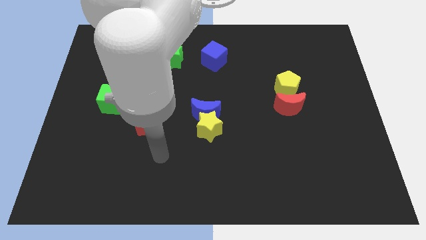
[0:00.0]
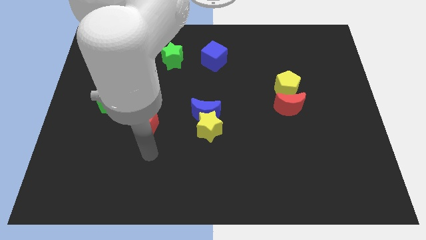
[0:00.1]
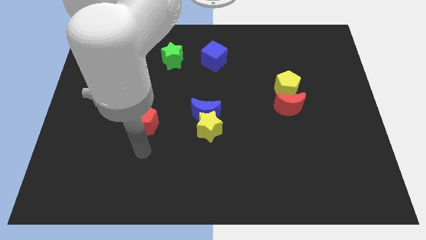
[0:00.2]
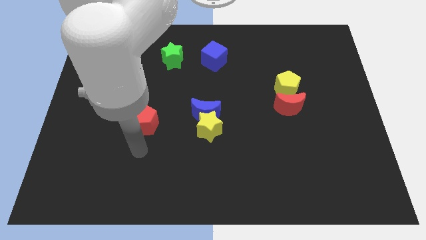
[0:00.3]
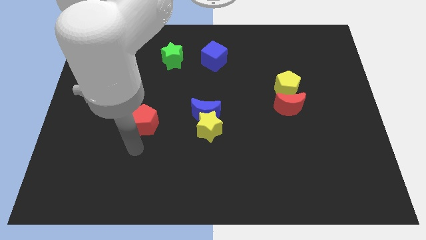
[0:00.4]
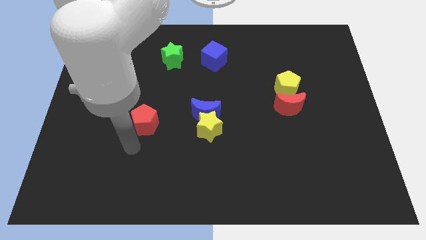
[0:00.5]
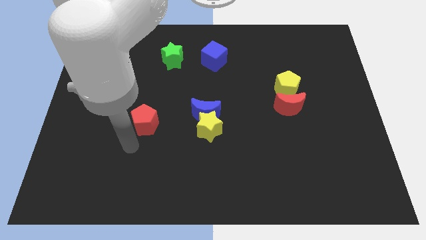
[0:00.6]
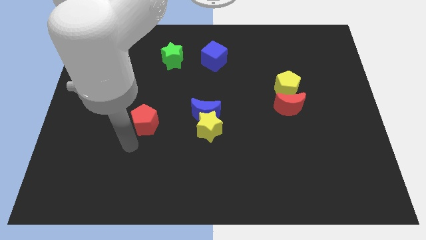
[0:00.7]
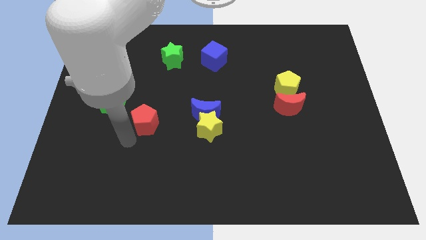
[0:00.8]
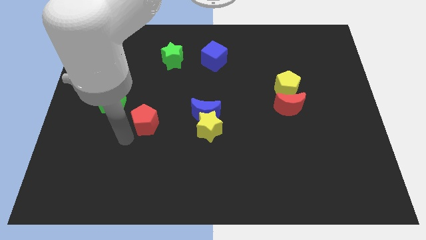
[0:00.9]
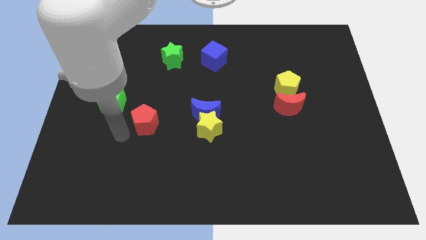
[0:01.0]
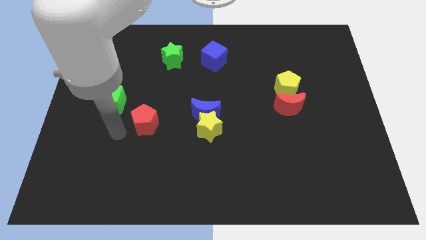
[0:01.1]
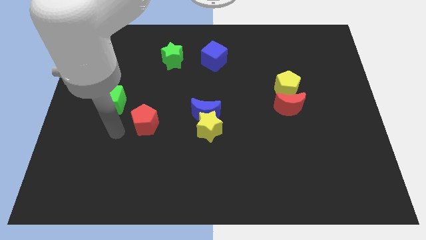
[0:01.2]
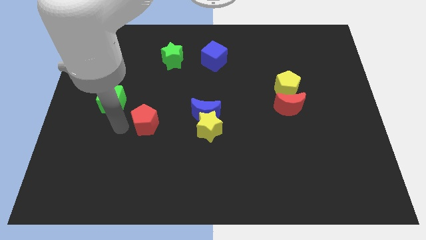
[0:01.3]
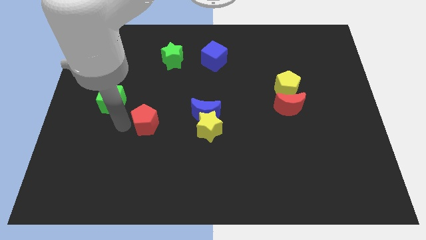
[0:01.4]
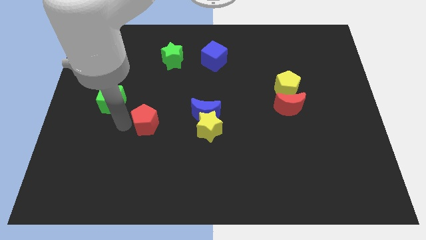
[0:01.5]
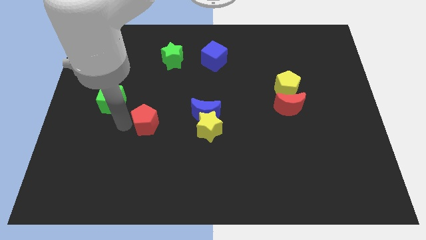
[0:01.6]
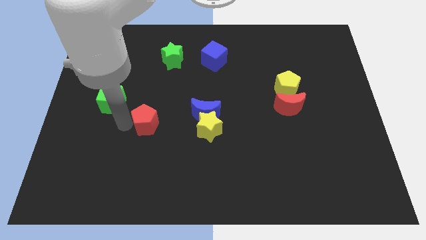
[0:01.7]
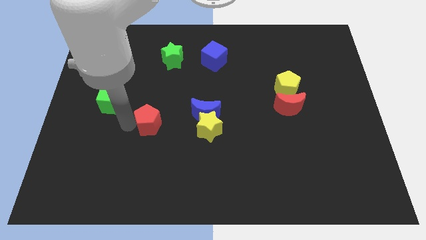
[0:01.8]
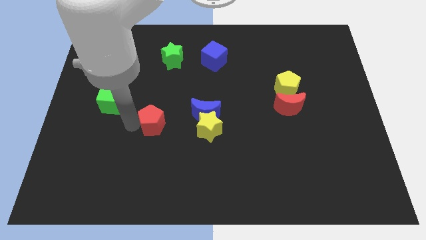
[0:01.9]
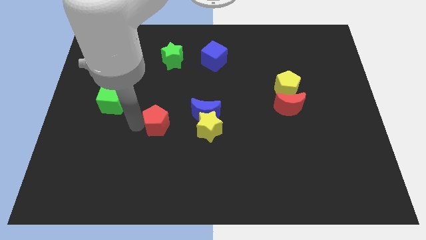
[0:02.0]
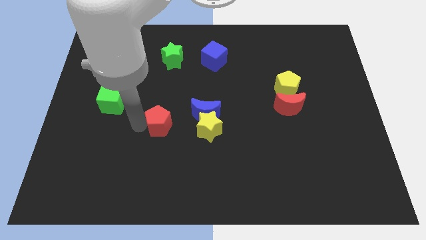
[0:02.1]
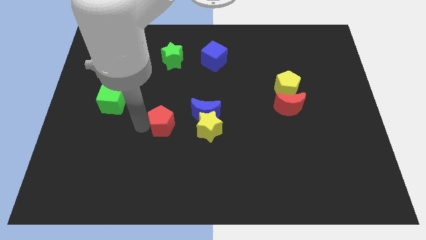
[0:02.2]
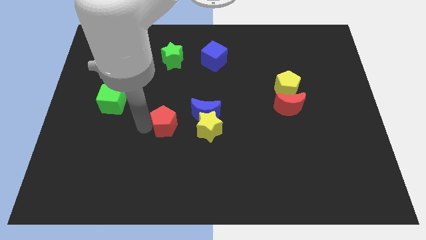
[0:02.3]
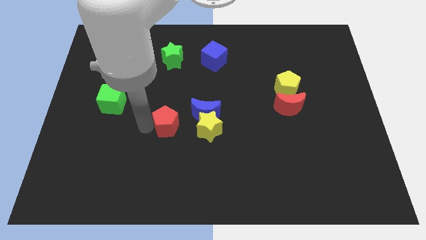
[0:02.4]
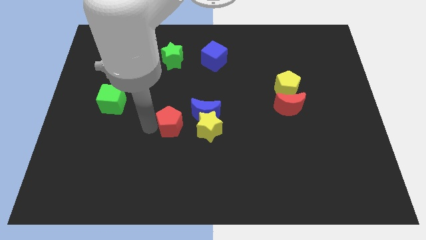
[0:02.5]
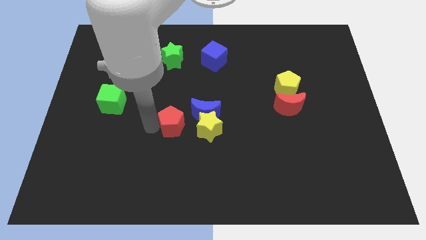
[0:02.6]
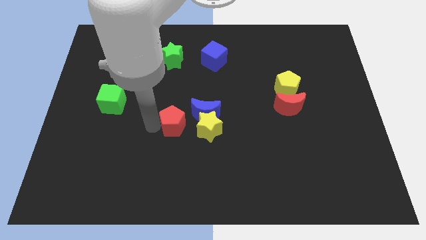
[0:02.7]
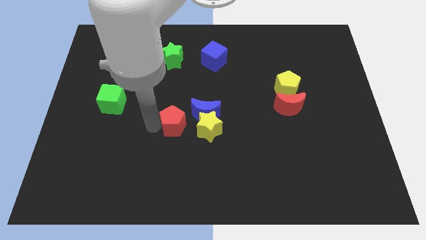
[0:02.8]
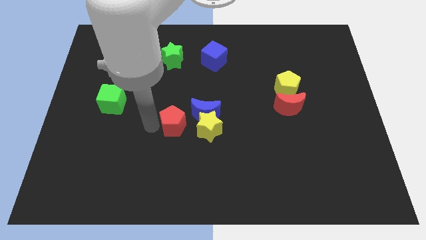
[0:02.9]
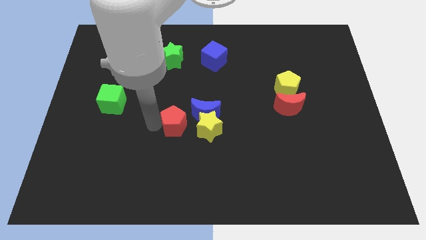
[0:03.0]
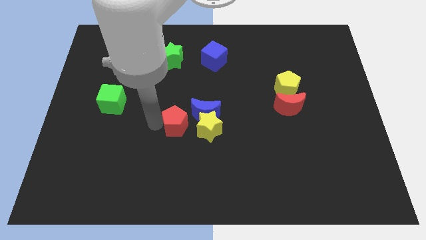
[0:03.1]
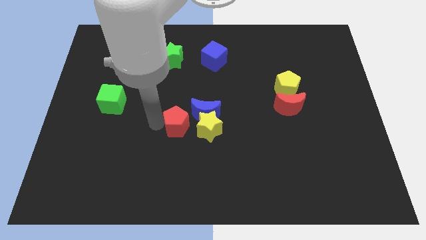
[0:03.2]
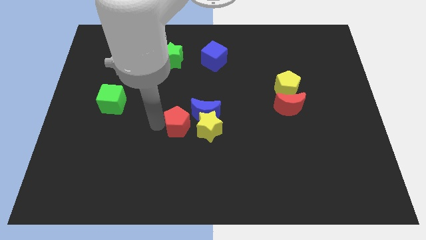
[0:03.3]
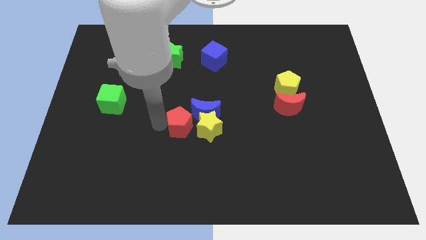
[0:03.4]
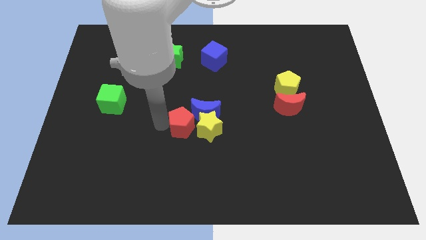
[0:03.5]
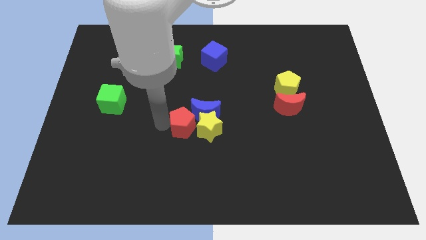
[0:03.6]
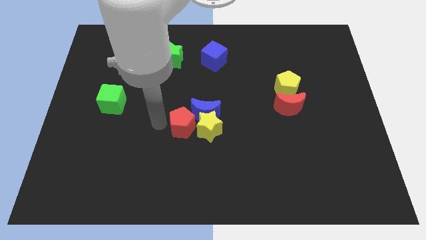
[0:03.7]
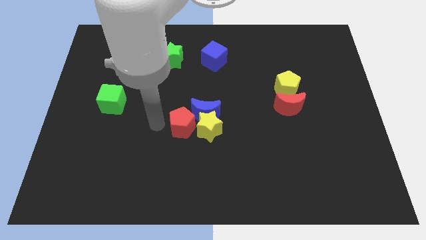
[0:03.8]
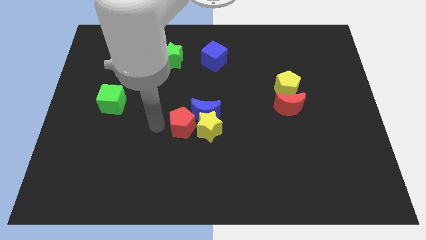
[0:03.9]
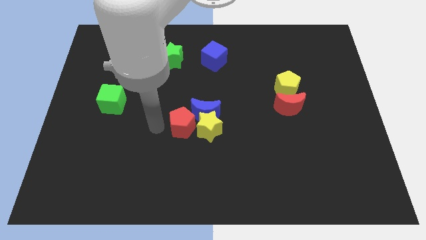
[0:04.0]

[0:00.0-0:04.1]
move red pentagon left below the blue moon

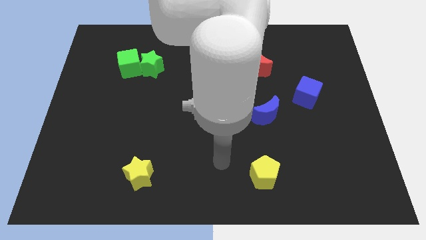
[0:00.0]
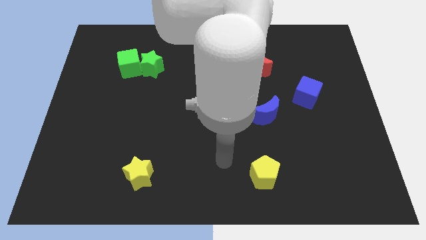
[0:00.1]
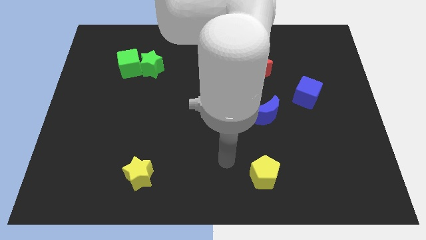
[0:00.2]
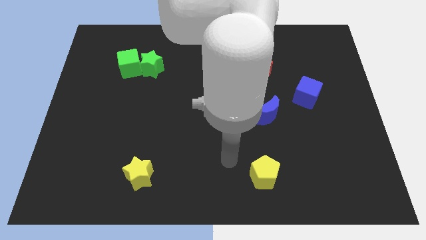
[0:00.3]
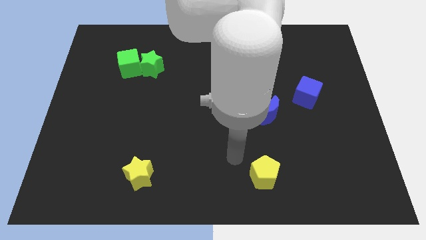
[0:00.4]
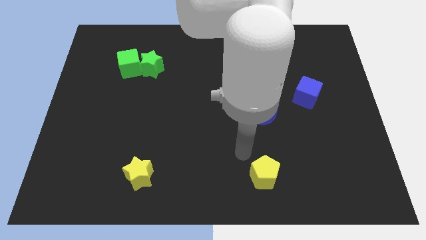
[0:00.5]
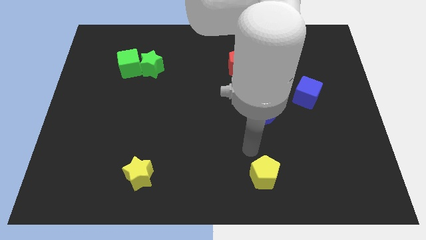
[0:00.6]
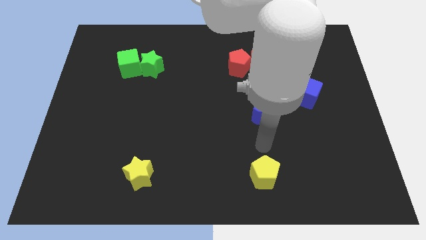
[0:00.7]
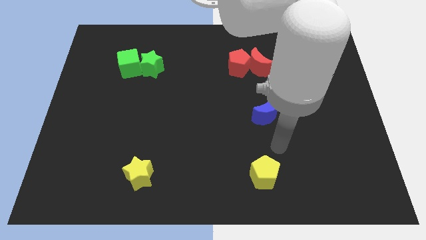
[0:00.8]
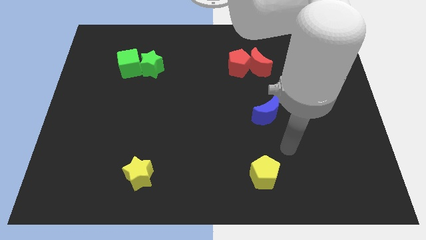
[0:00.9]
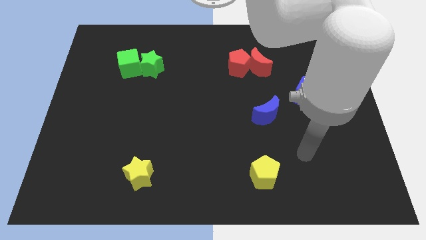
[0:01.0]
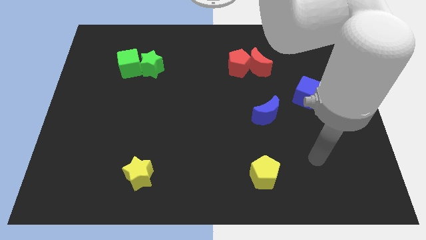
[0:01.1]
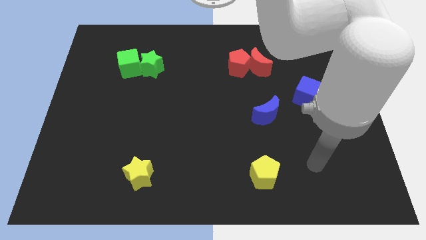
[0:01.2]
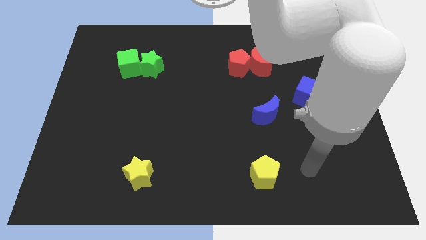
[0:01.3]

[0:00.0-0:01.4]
move your arm towards the right side of the board

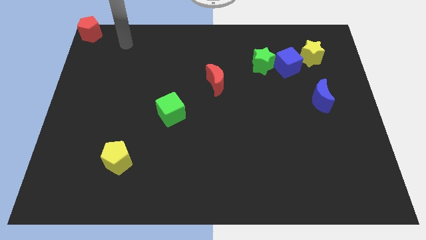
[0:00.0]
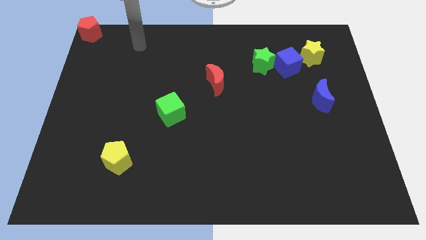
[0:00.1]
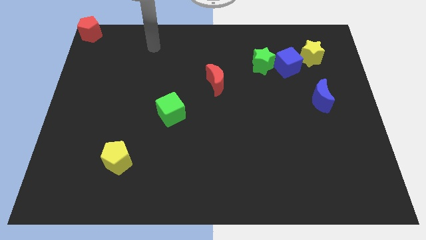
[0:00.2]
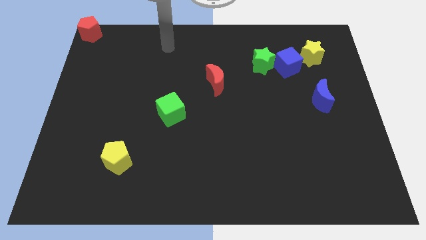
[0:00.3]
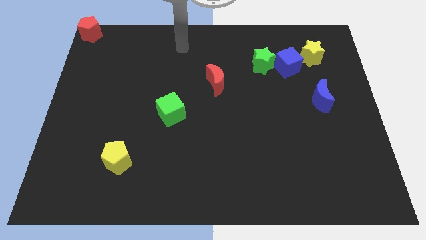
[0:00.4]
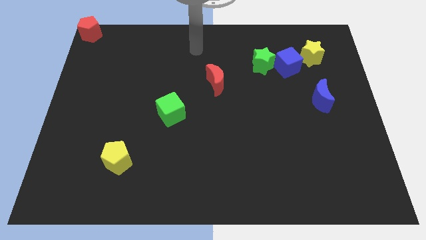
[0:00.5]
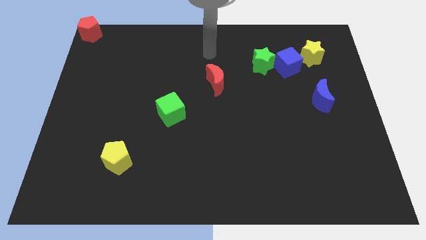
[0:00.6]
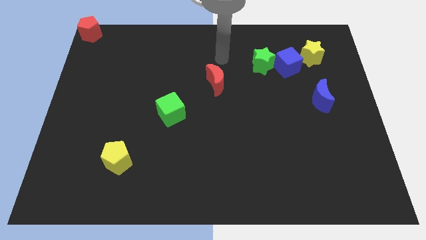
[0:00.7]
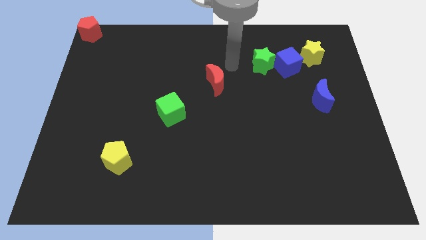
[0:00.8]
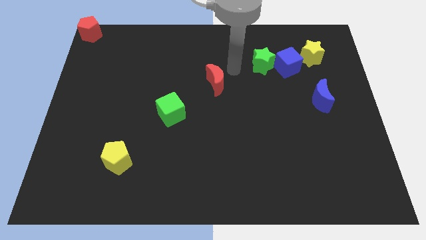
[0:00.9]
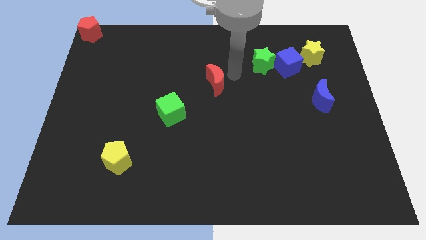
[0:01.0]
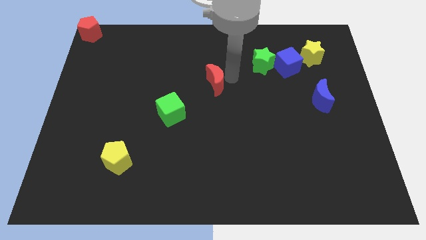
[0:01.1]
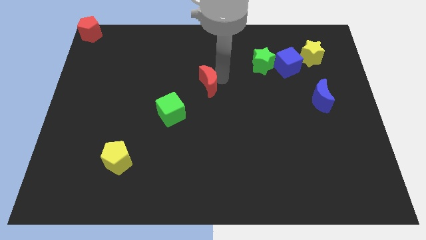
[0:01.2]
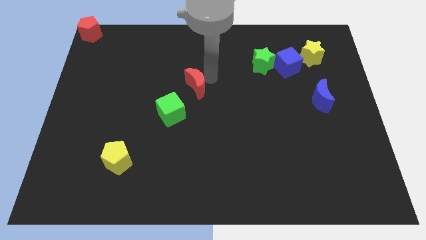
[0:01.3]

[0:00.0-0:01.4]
move red crescent slightly

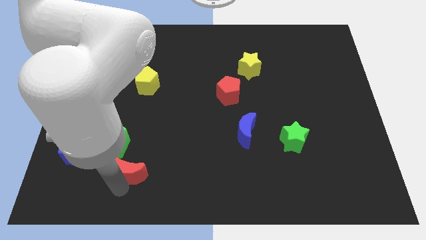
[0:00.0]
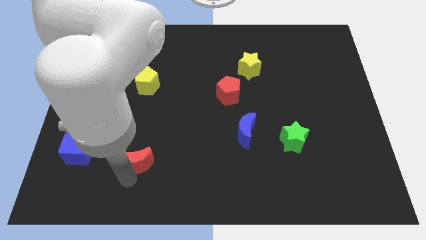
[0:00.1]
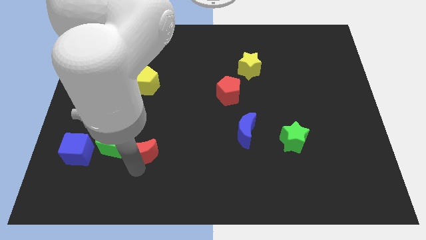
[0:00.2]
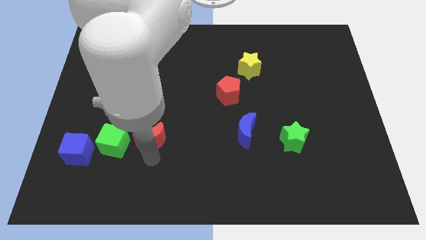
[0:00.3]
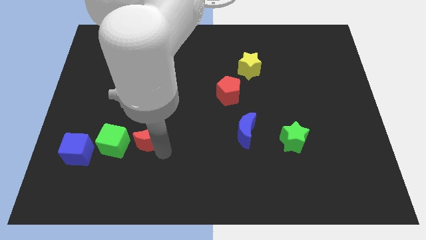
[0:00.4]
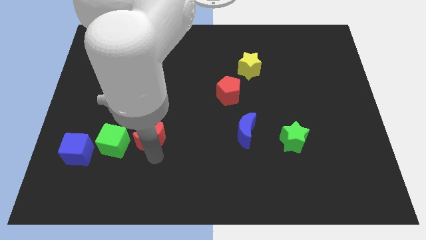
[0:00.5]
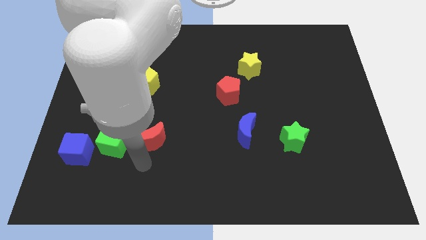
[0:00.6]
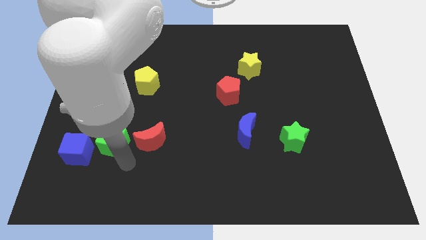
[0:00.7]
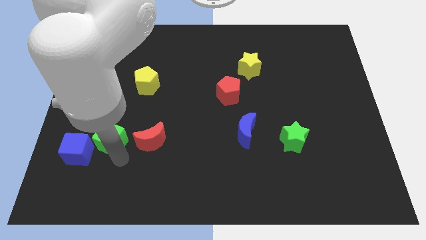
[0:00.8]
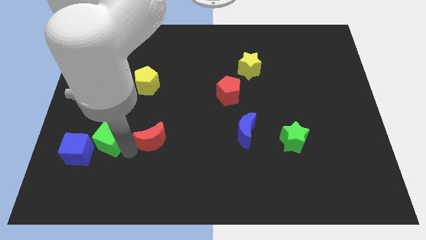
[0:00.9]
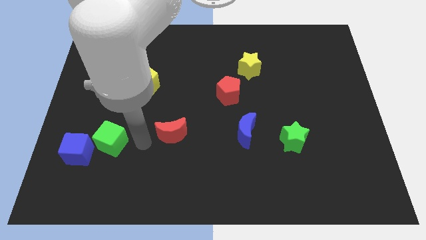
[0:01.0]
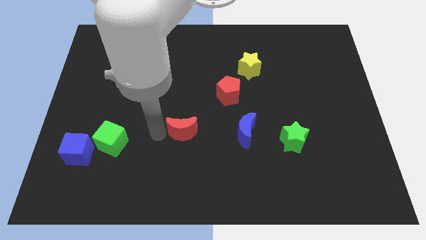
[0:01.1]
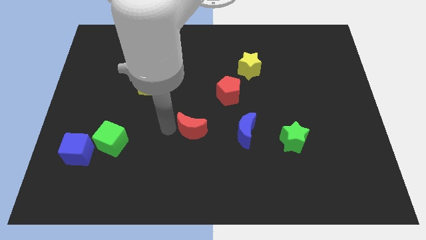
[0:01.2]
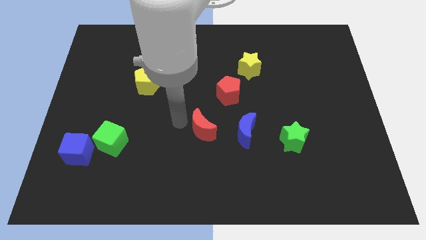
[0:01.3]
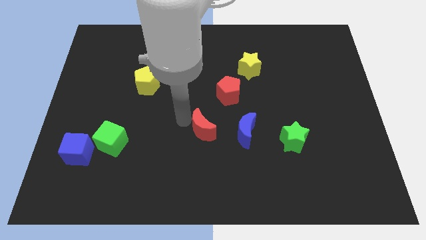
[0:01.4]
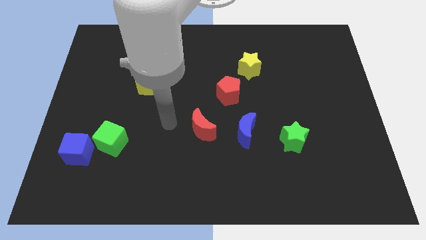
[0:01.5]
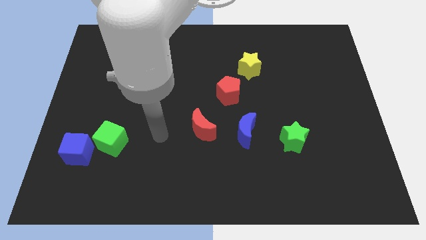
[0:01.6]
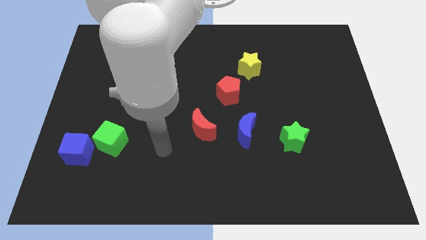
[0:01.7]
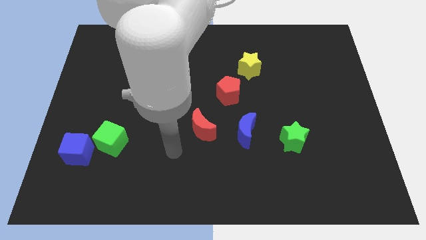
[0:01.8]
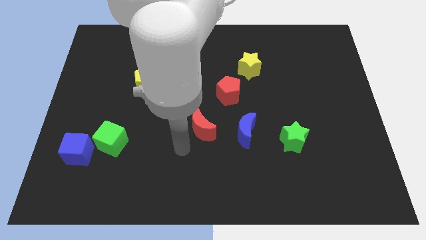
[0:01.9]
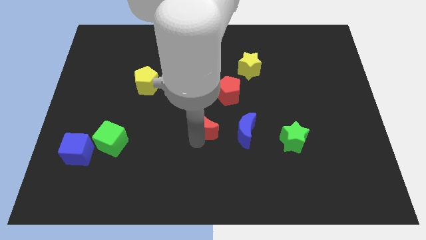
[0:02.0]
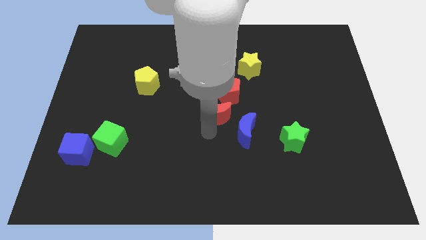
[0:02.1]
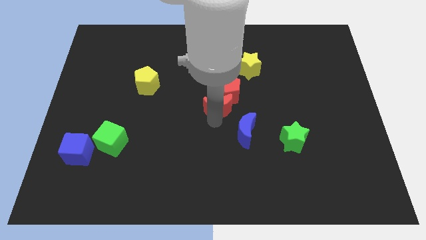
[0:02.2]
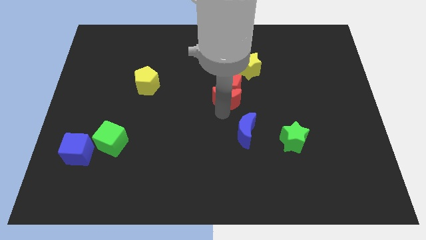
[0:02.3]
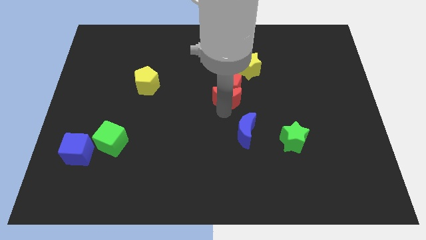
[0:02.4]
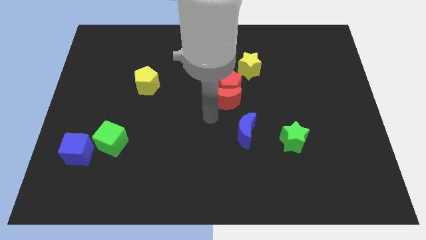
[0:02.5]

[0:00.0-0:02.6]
move the red crescent to the bottom of the red pentagon
